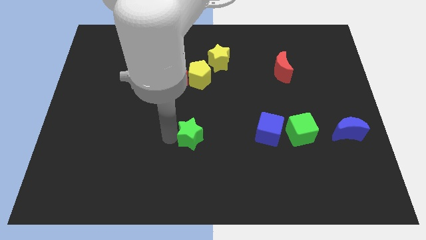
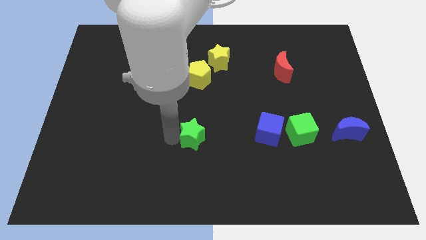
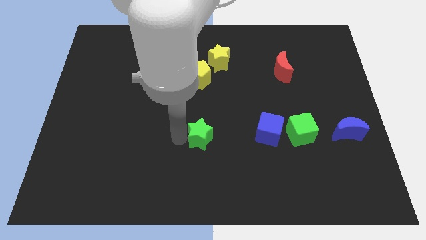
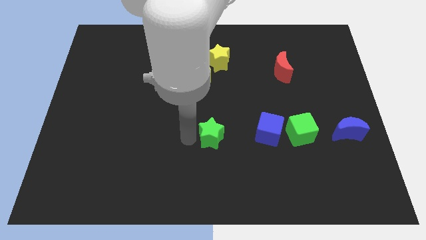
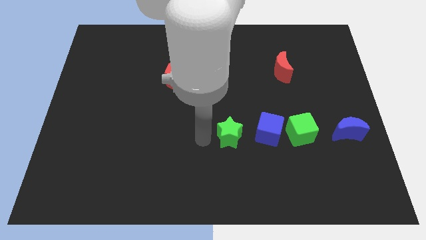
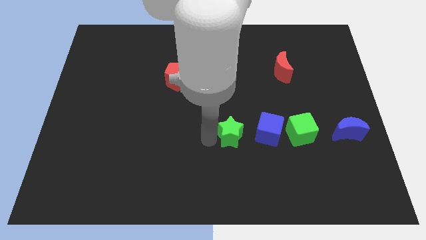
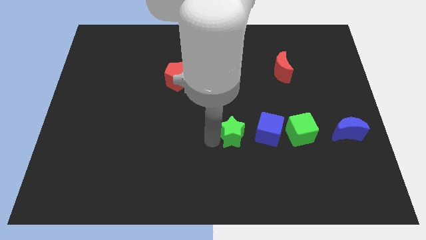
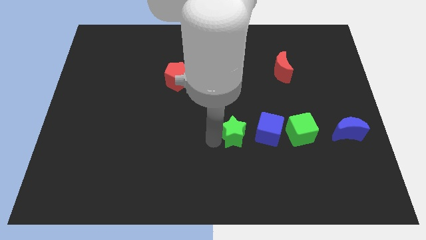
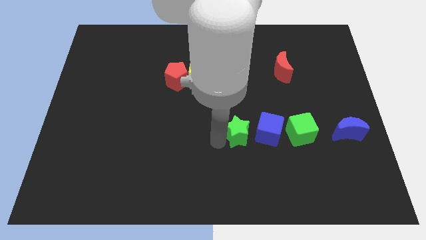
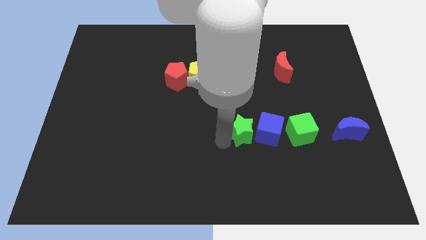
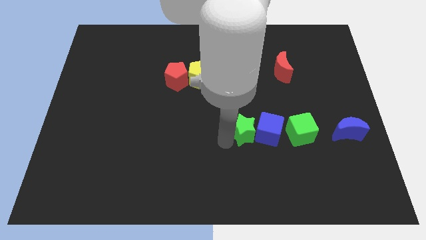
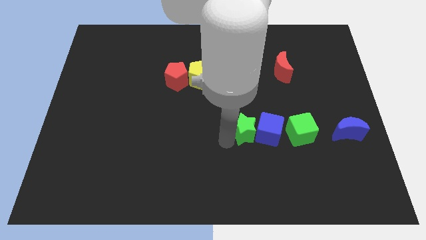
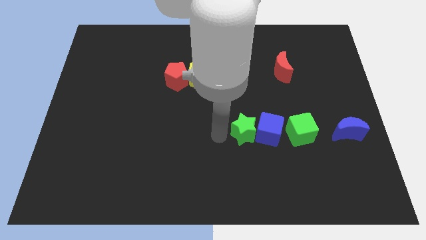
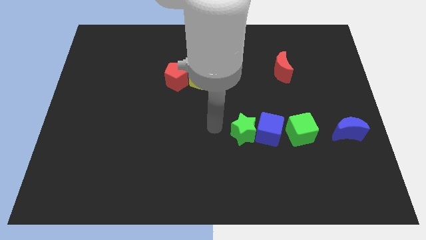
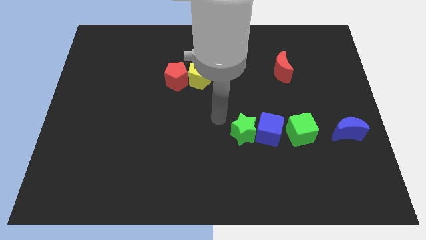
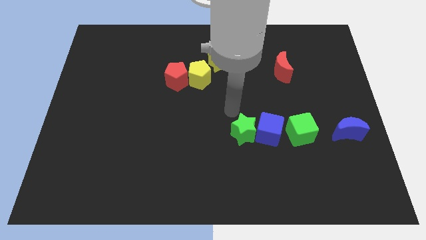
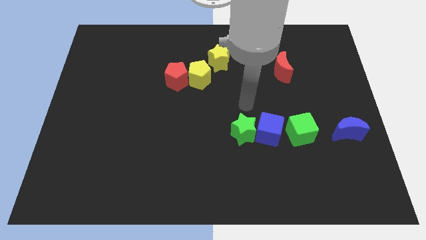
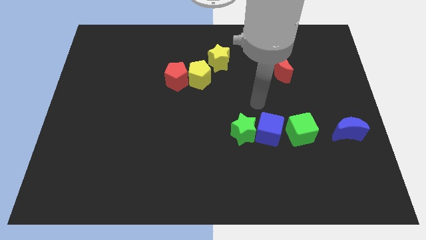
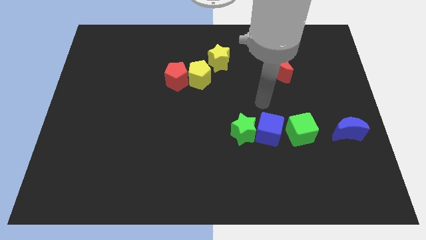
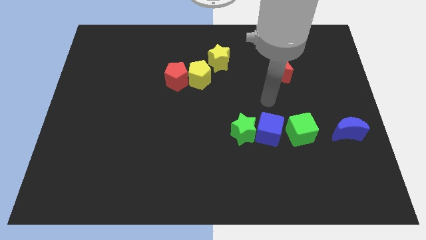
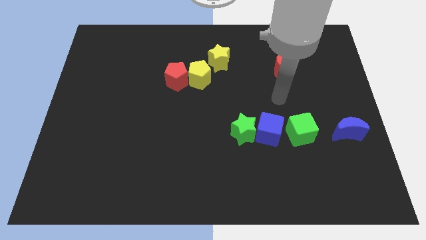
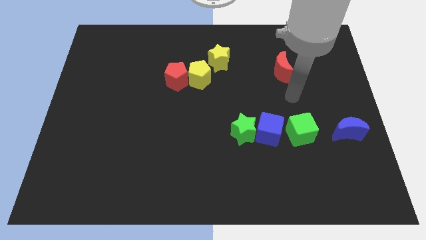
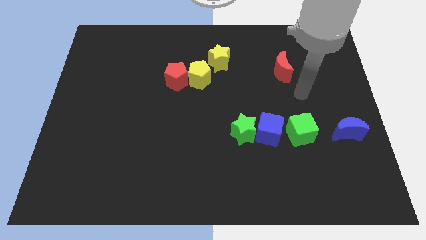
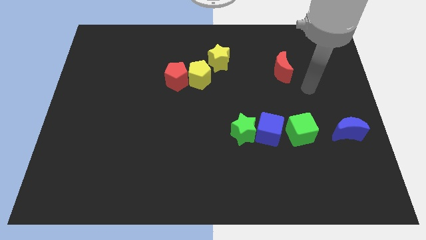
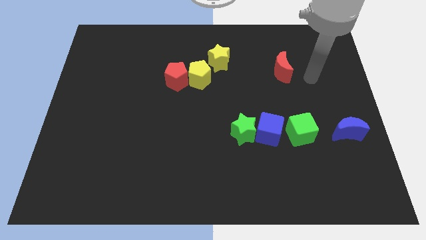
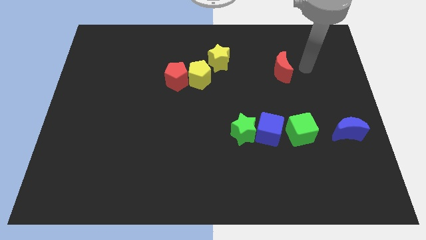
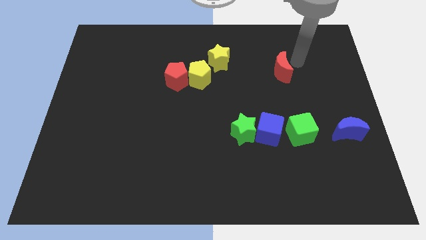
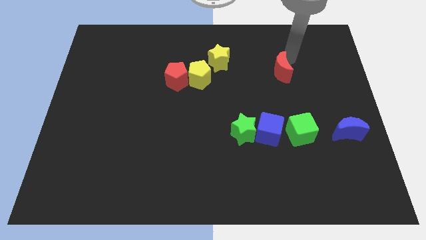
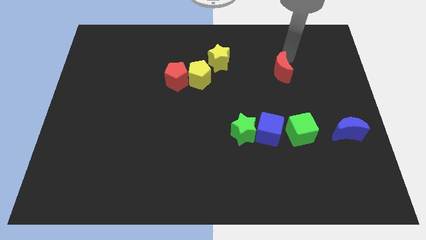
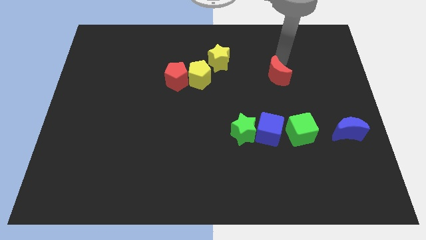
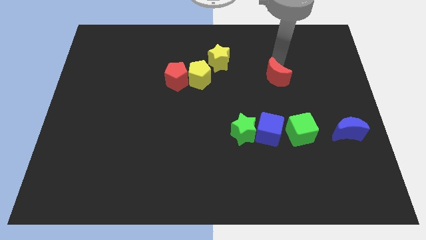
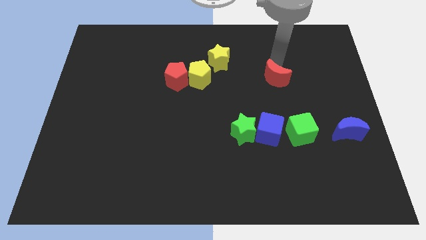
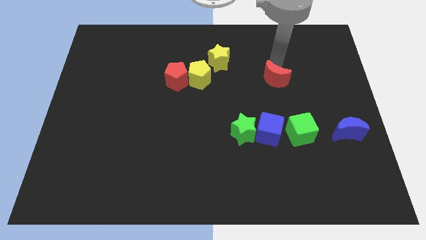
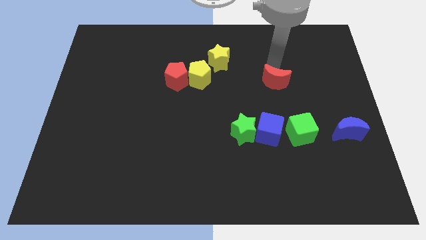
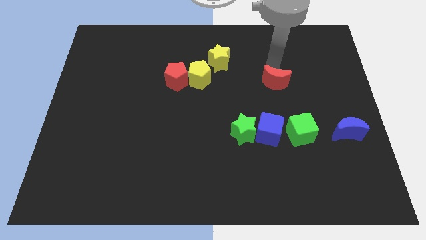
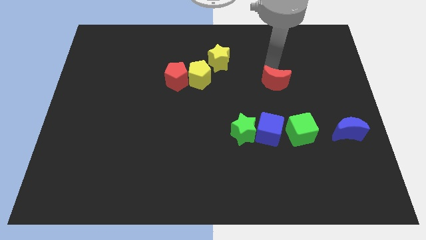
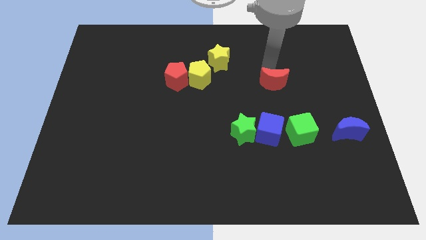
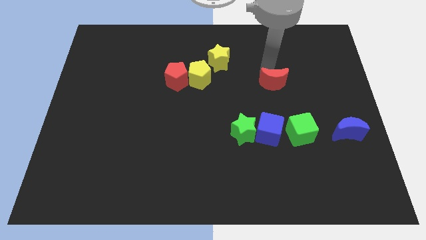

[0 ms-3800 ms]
move the red moon above the blue cube

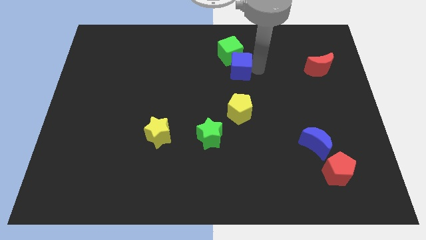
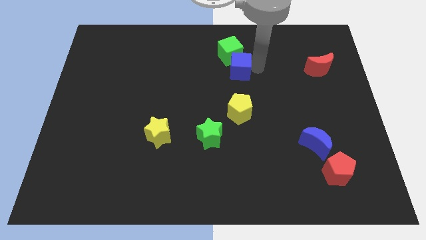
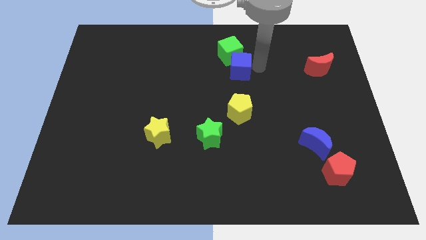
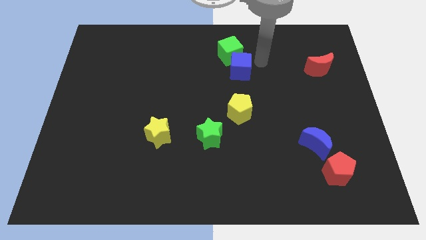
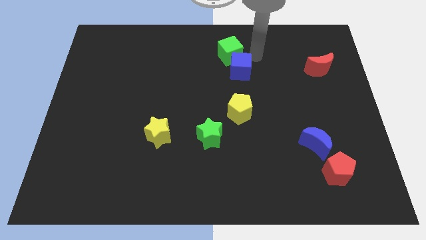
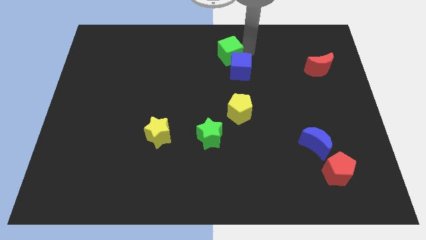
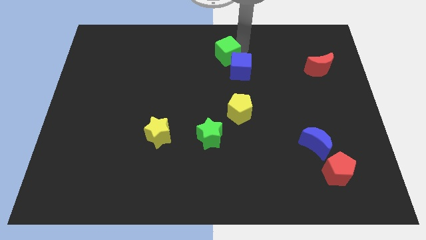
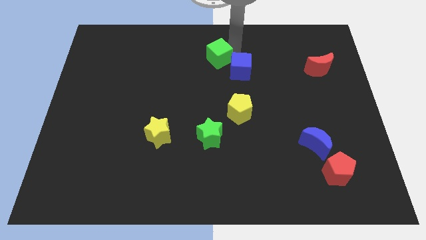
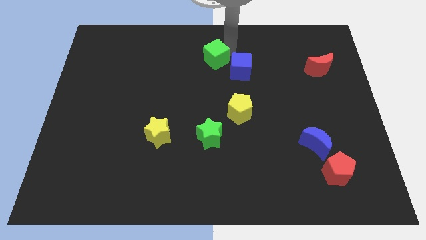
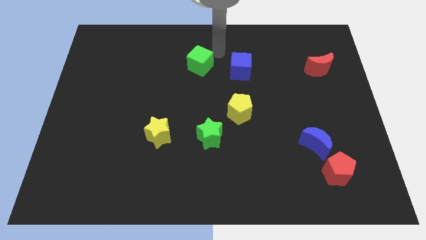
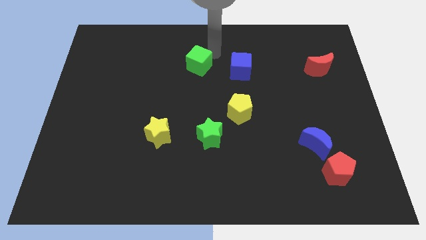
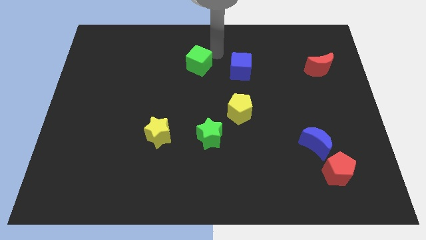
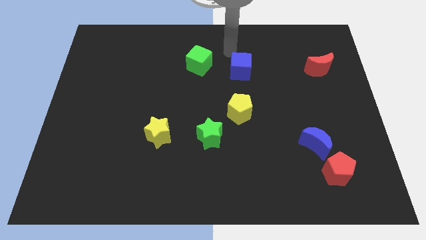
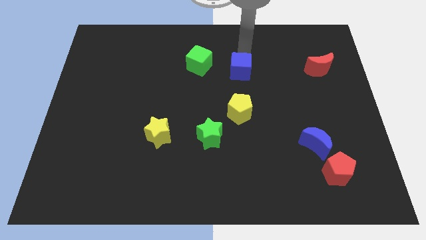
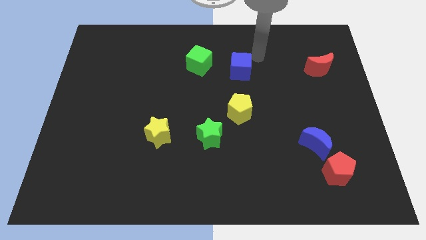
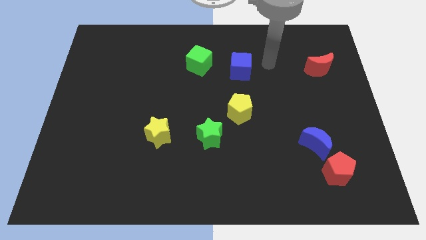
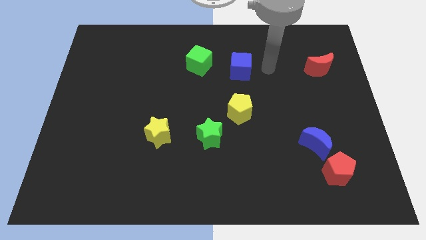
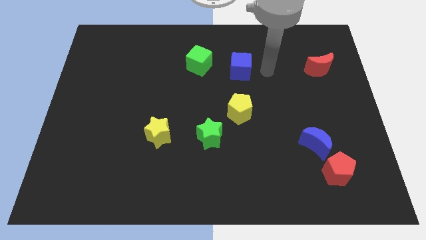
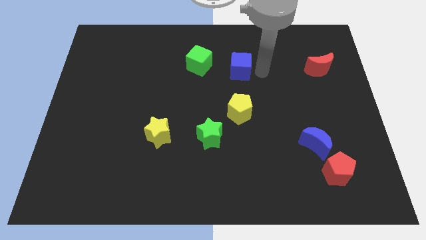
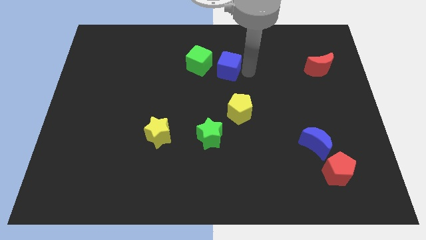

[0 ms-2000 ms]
push the green cube to the left side

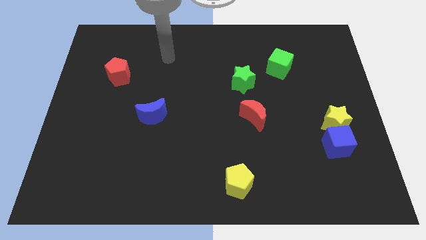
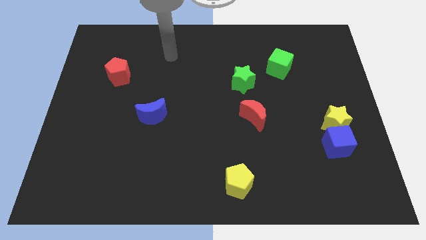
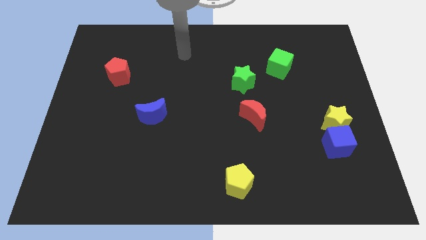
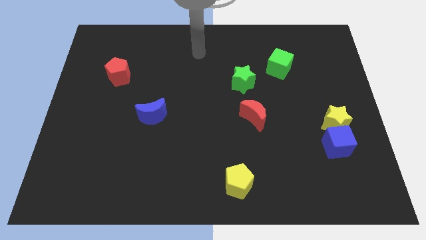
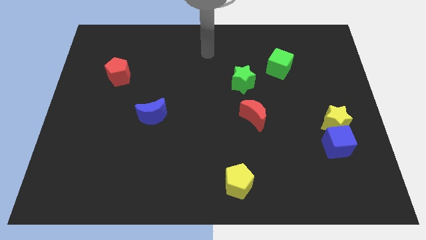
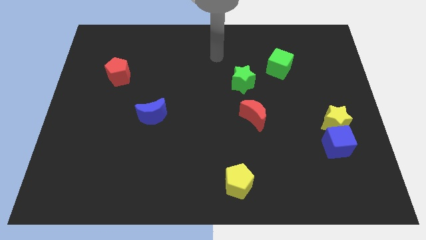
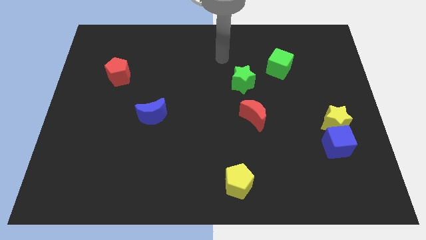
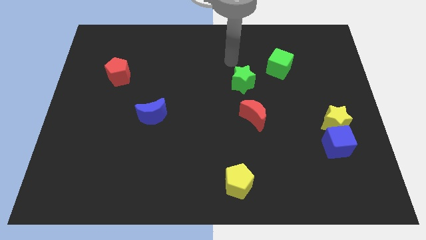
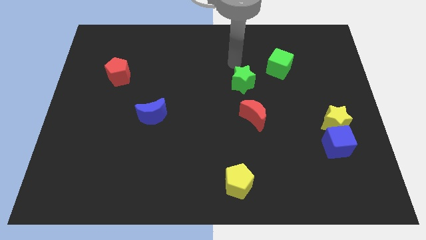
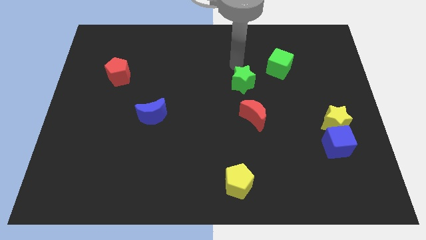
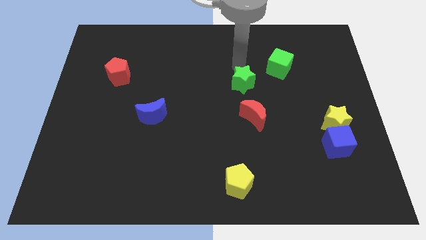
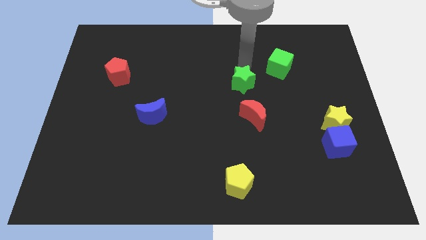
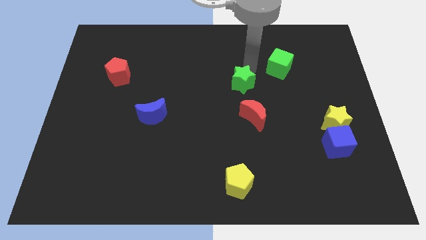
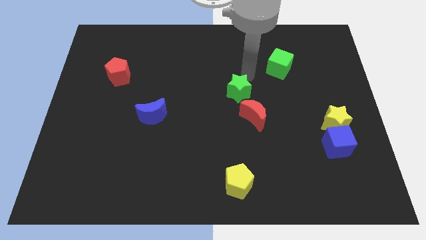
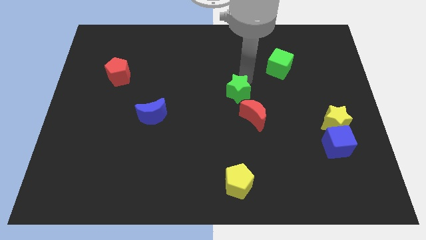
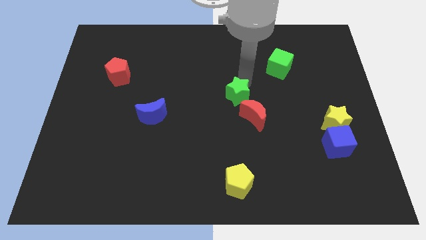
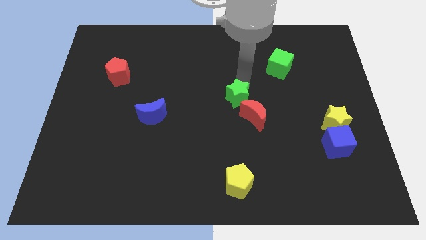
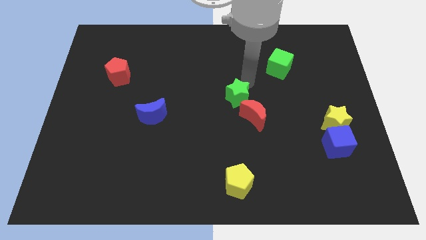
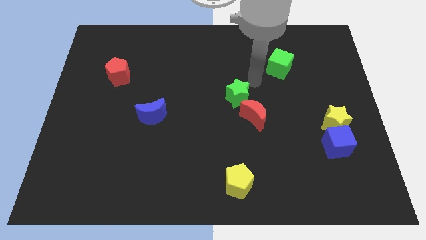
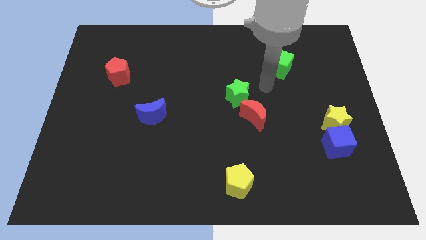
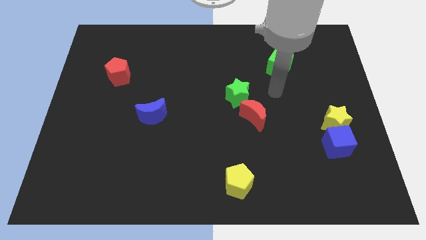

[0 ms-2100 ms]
move the green star slightly to the bottom

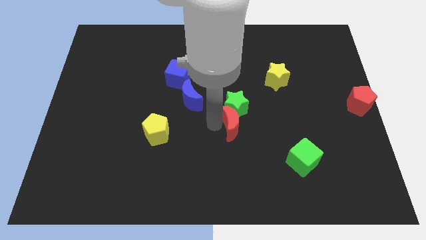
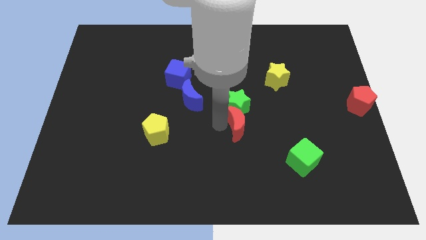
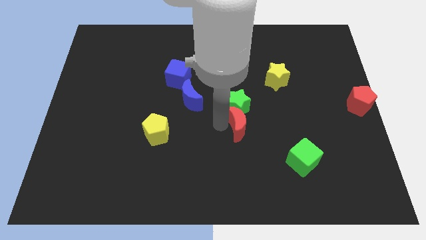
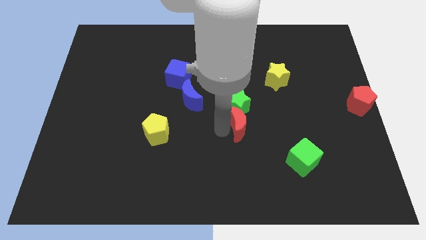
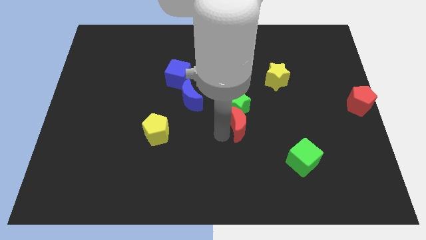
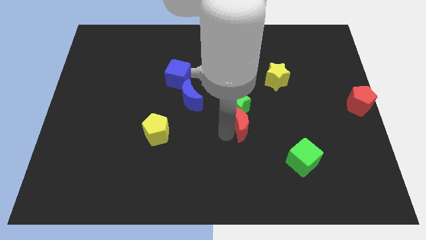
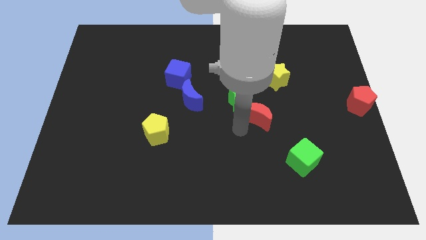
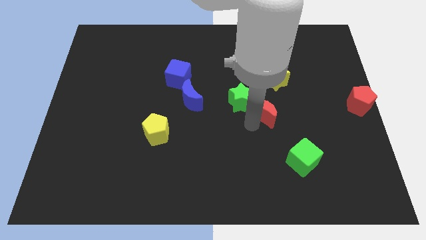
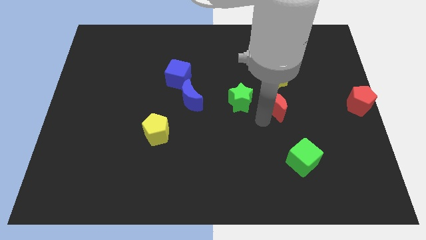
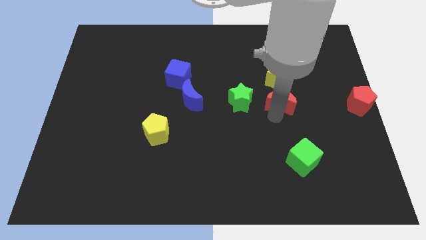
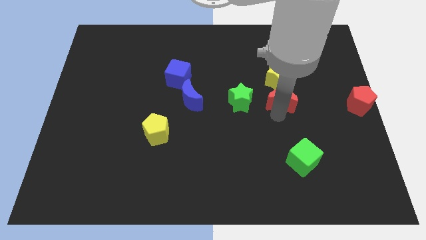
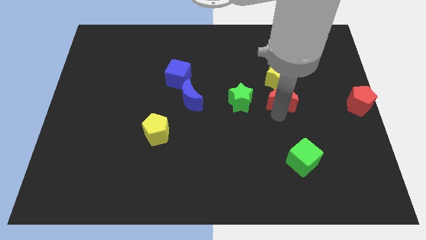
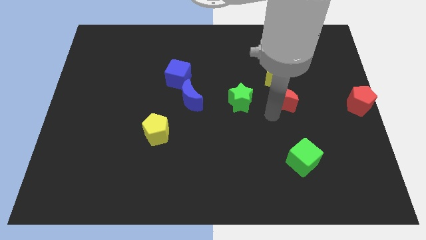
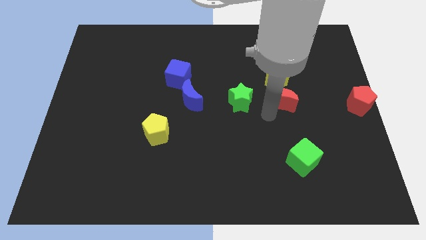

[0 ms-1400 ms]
push red crescent below yellow star
